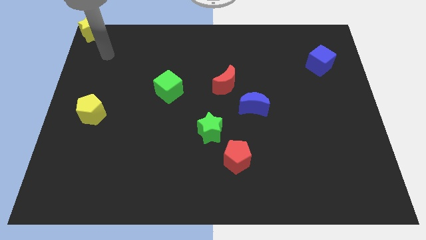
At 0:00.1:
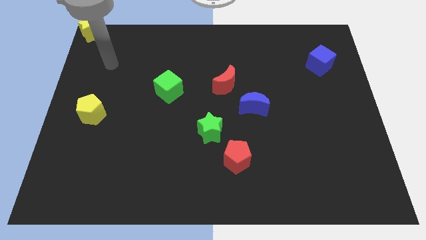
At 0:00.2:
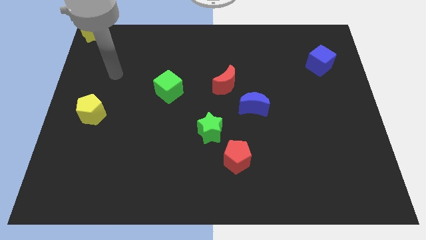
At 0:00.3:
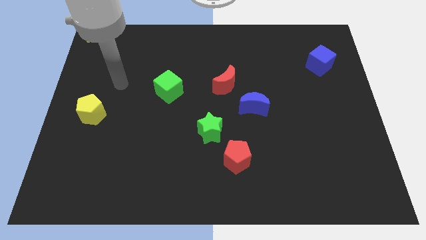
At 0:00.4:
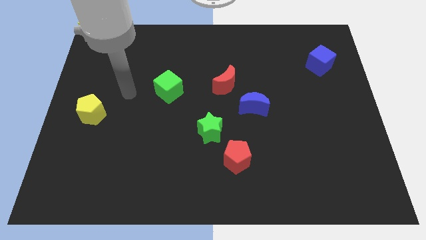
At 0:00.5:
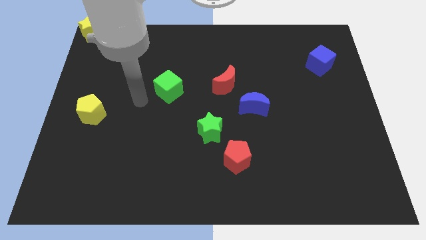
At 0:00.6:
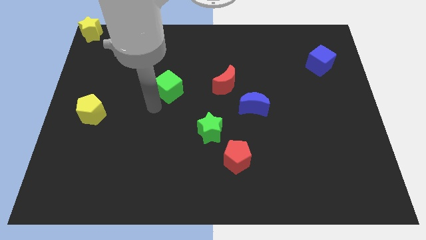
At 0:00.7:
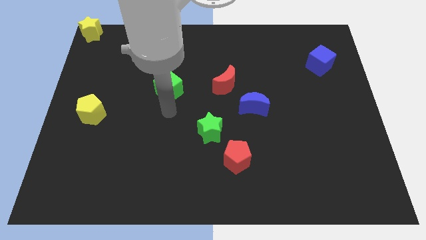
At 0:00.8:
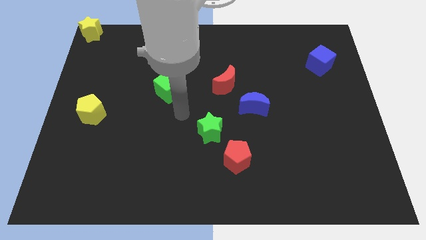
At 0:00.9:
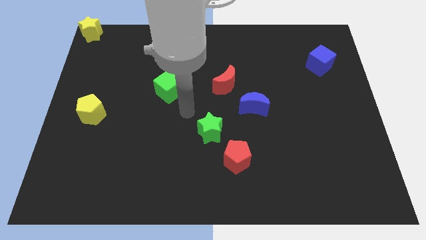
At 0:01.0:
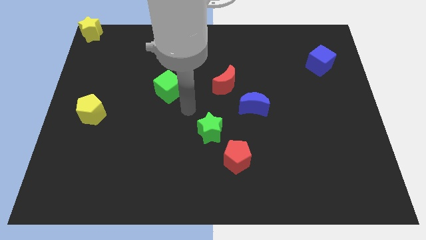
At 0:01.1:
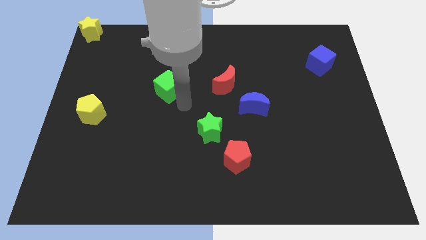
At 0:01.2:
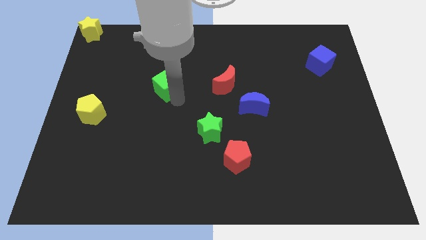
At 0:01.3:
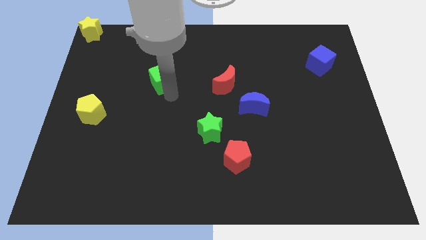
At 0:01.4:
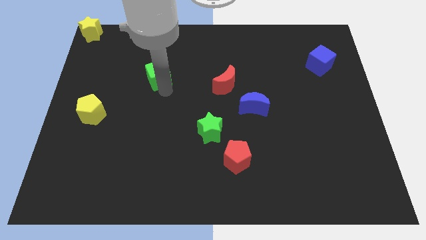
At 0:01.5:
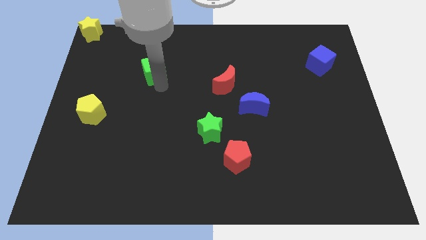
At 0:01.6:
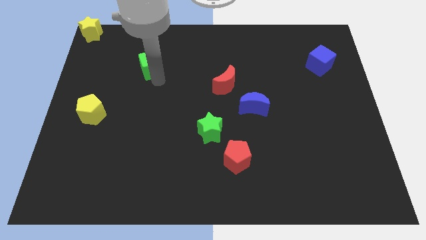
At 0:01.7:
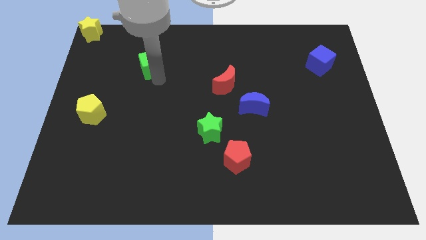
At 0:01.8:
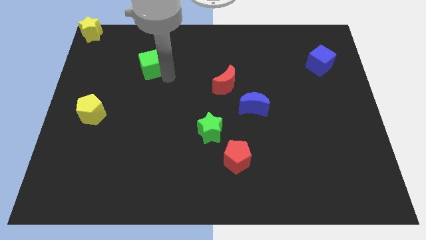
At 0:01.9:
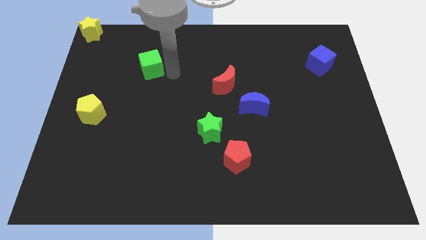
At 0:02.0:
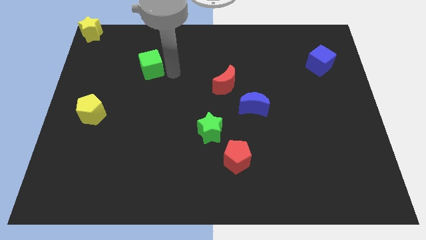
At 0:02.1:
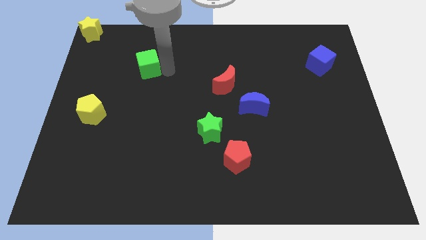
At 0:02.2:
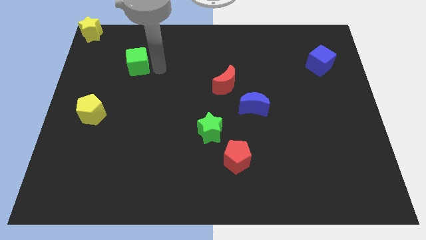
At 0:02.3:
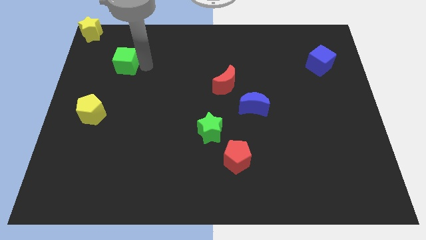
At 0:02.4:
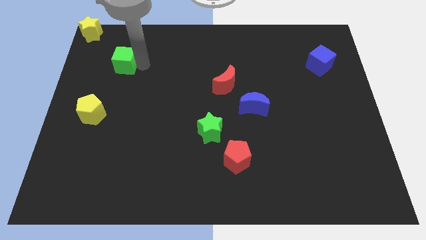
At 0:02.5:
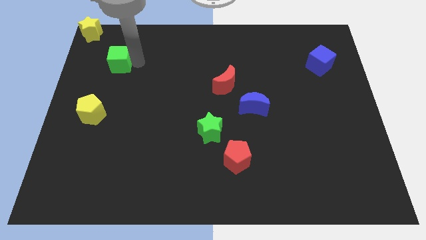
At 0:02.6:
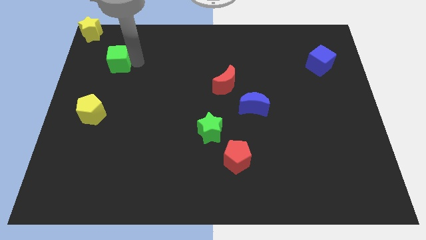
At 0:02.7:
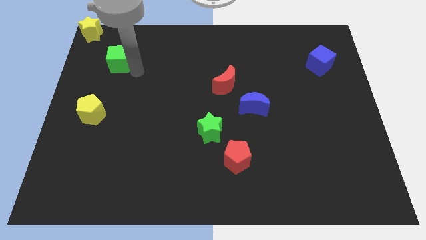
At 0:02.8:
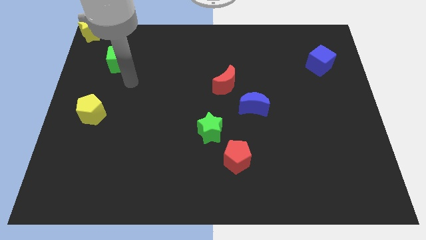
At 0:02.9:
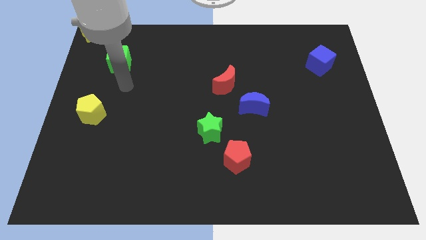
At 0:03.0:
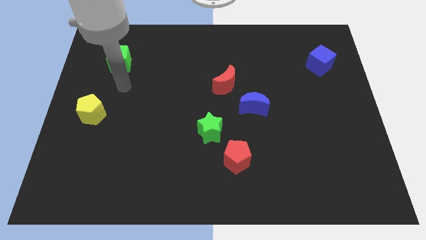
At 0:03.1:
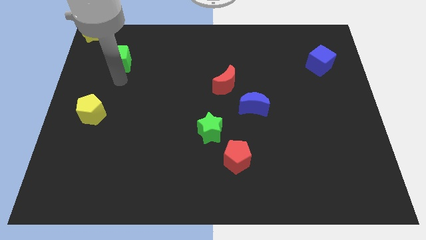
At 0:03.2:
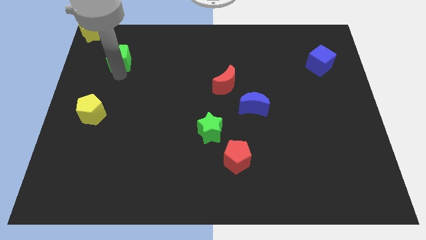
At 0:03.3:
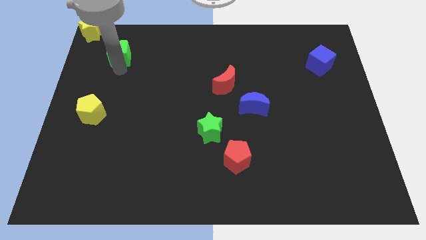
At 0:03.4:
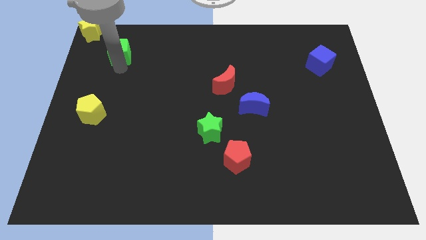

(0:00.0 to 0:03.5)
move the green cube towards the top left

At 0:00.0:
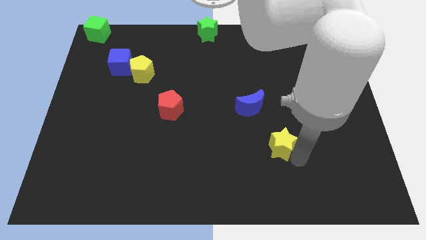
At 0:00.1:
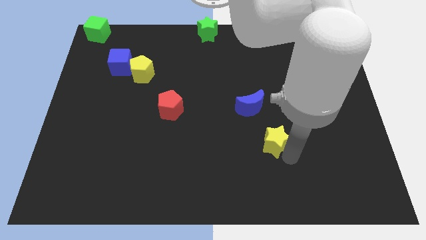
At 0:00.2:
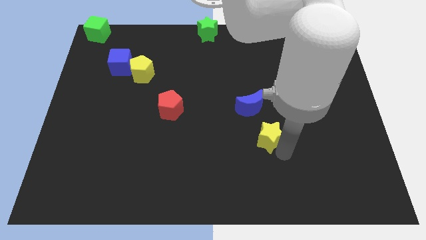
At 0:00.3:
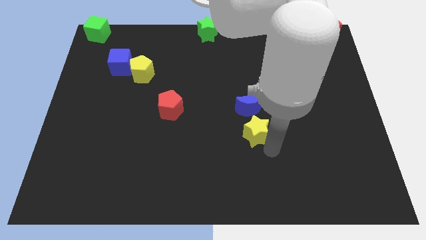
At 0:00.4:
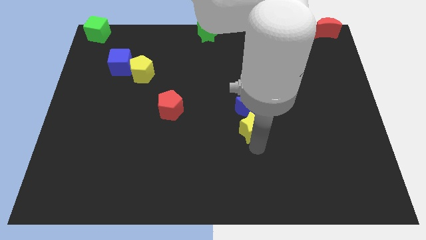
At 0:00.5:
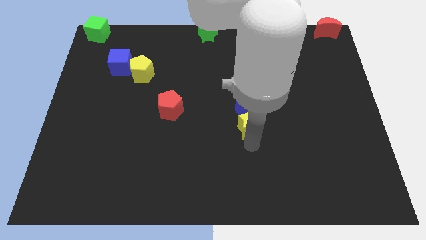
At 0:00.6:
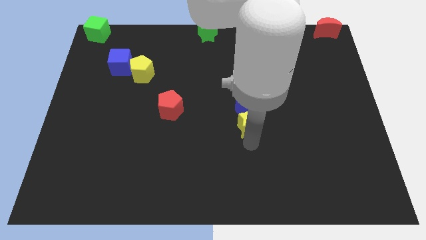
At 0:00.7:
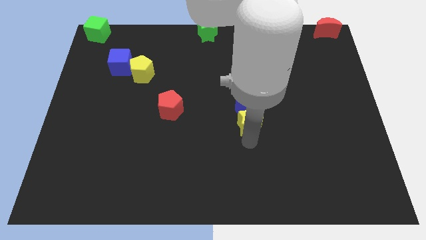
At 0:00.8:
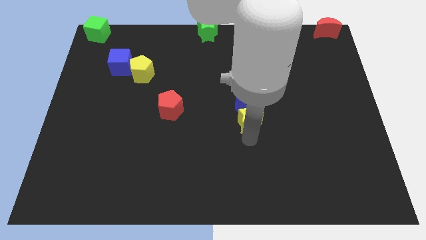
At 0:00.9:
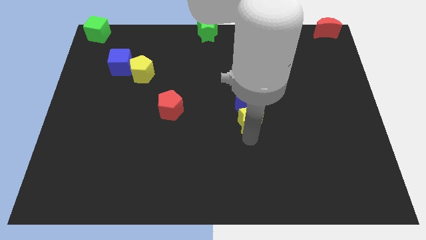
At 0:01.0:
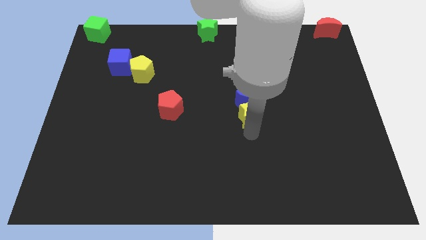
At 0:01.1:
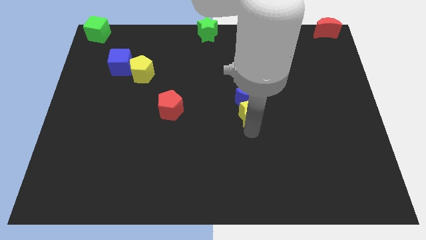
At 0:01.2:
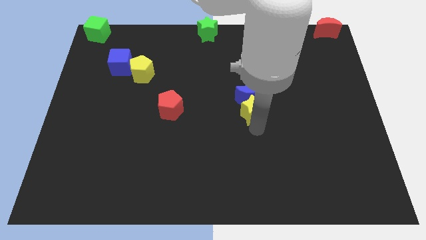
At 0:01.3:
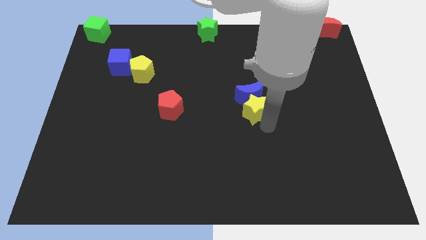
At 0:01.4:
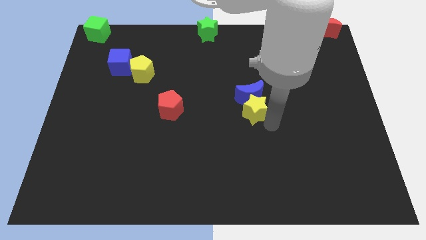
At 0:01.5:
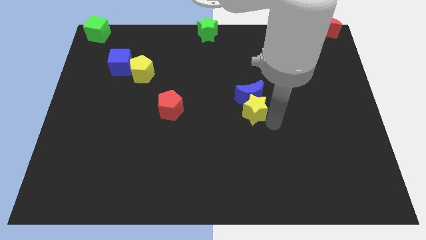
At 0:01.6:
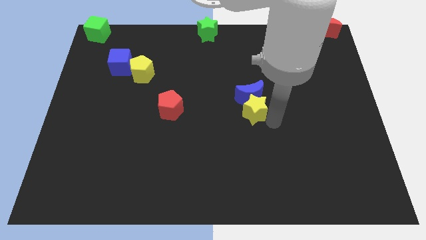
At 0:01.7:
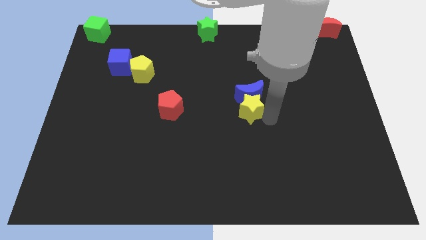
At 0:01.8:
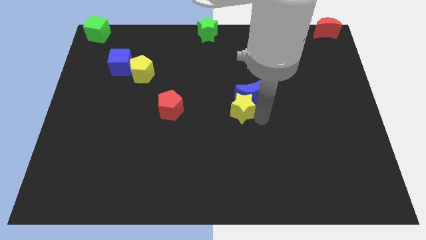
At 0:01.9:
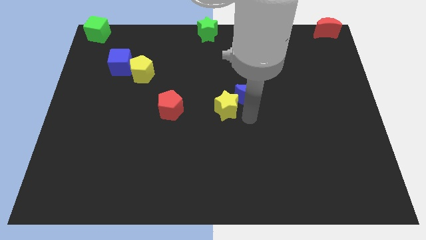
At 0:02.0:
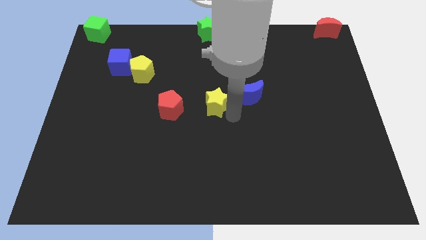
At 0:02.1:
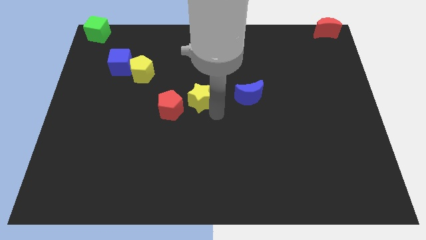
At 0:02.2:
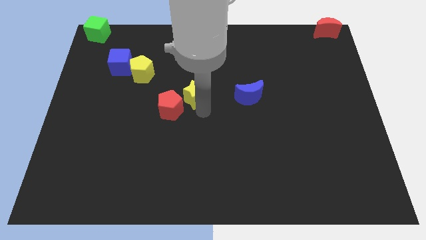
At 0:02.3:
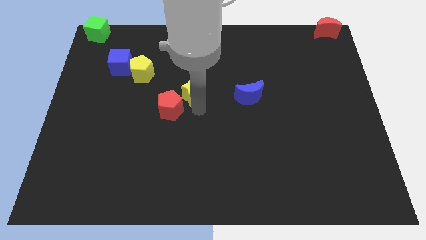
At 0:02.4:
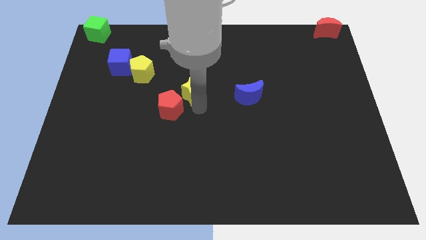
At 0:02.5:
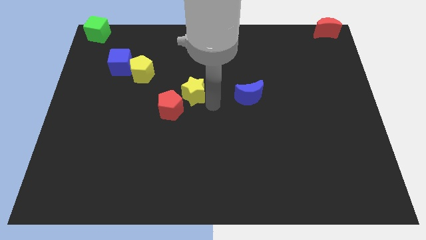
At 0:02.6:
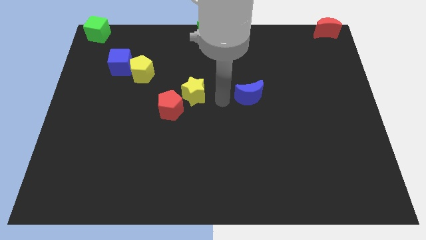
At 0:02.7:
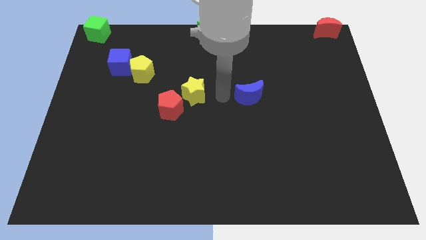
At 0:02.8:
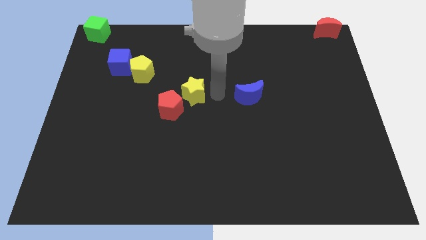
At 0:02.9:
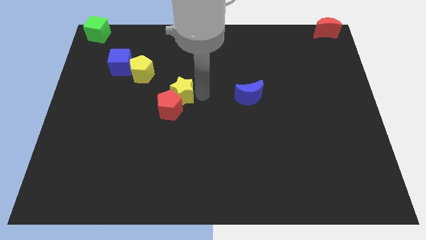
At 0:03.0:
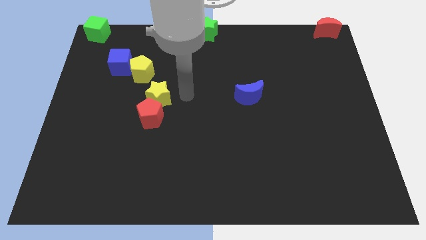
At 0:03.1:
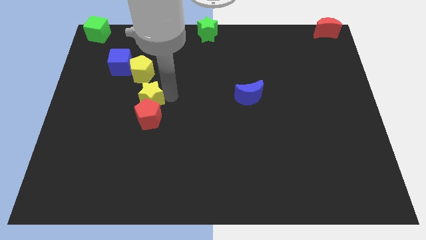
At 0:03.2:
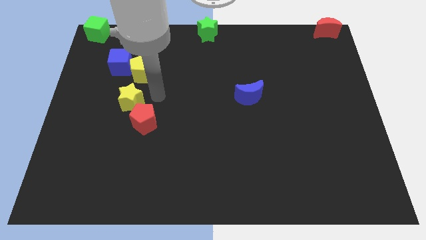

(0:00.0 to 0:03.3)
place yellow star above red pentagon

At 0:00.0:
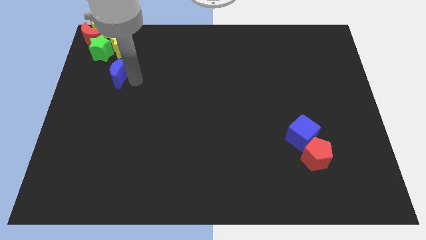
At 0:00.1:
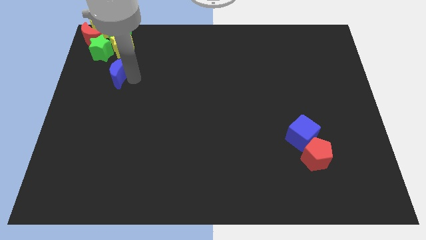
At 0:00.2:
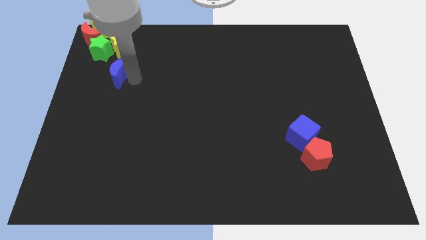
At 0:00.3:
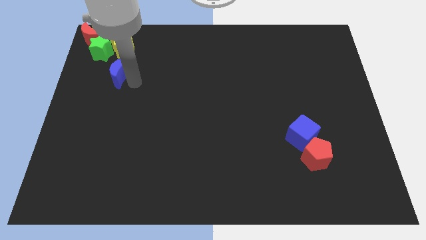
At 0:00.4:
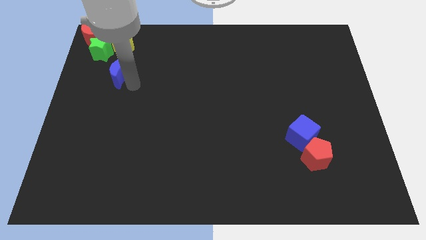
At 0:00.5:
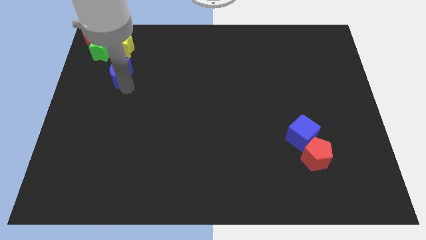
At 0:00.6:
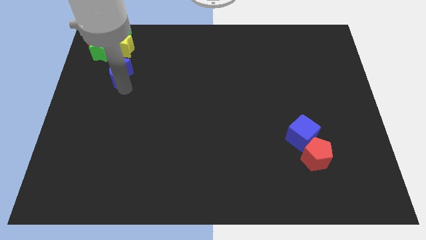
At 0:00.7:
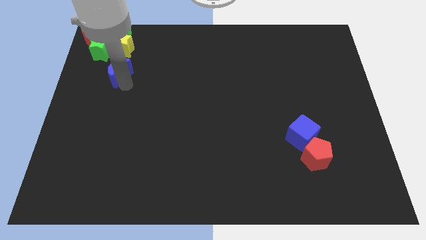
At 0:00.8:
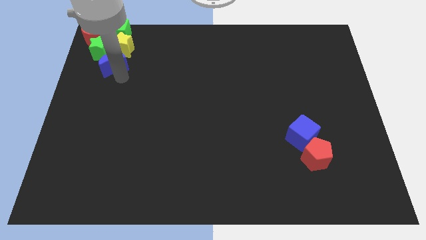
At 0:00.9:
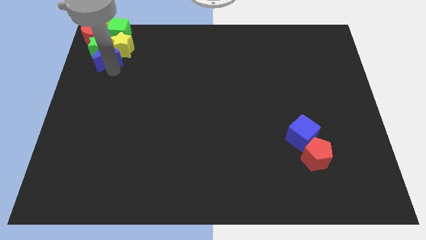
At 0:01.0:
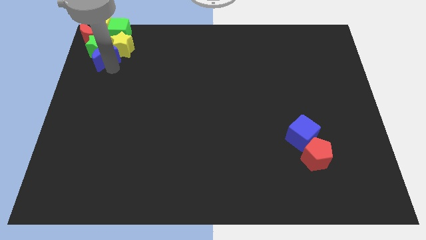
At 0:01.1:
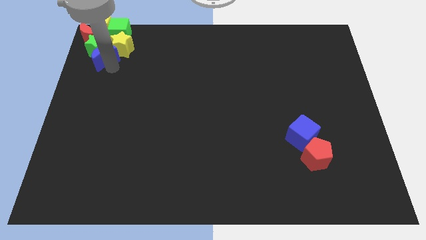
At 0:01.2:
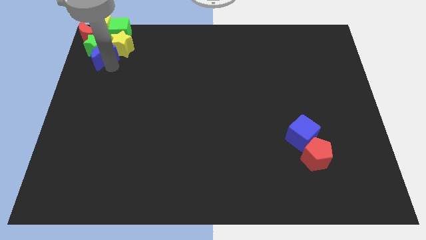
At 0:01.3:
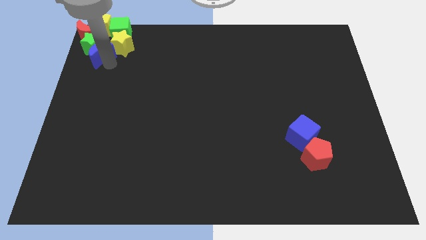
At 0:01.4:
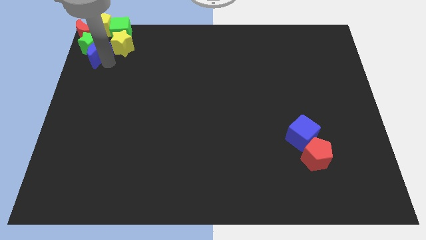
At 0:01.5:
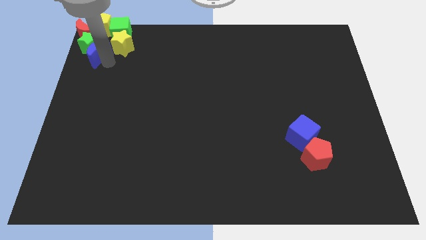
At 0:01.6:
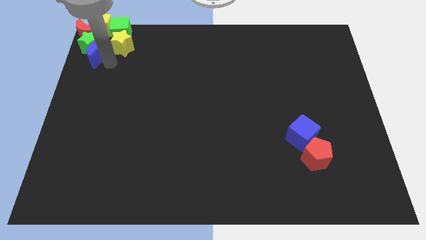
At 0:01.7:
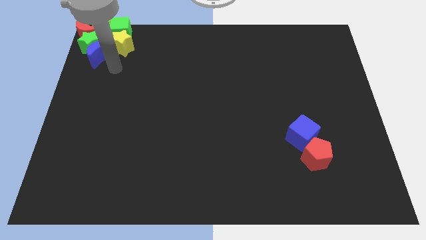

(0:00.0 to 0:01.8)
push the blue crescent into the green star

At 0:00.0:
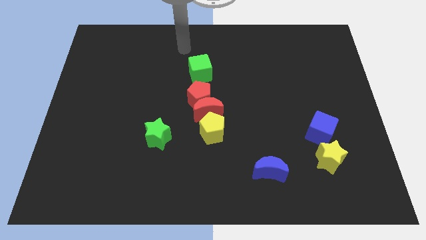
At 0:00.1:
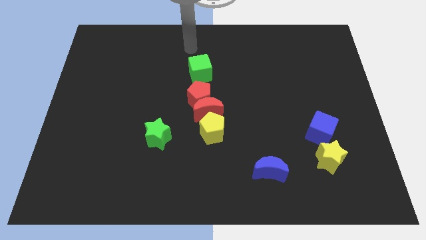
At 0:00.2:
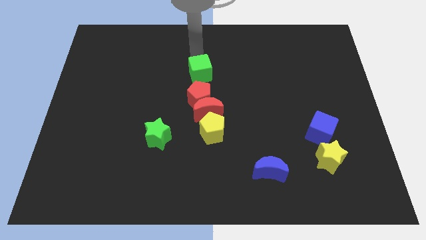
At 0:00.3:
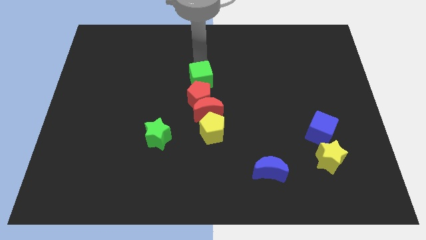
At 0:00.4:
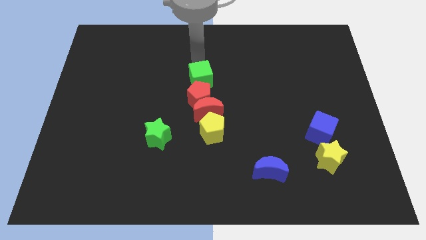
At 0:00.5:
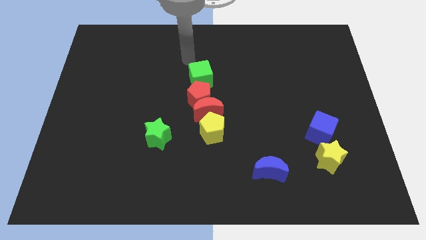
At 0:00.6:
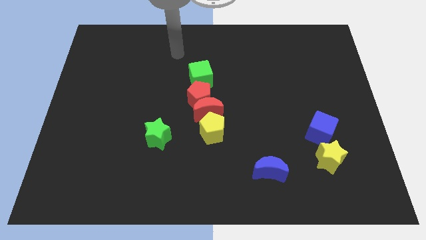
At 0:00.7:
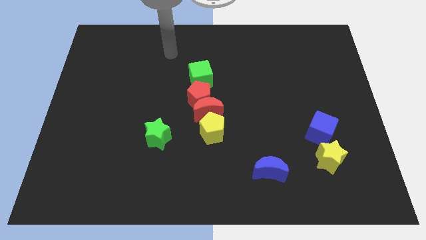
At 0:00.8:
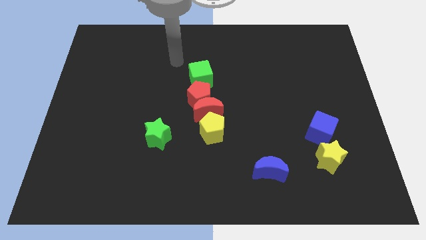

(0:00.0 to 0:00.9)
move the green cube into the red pentagon
